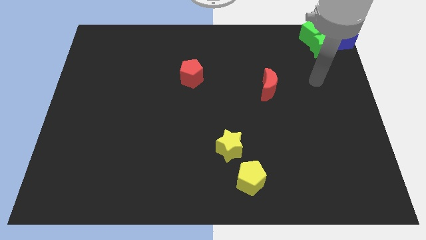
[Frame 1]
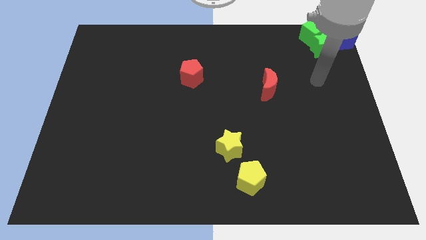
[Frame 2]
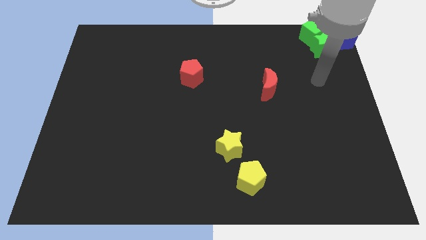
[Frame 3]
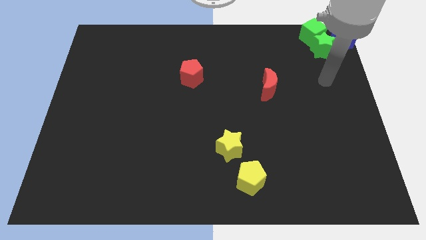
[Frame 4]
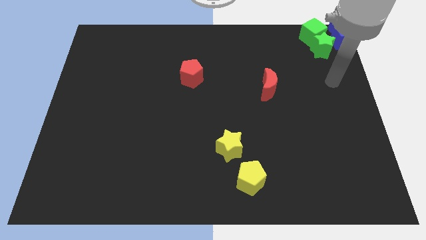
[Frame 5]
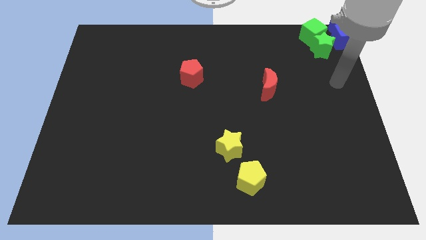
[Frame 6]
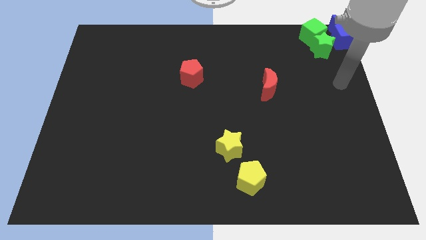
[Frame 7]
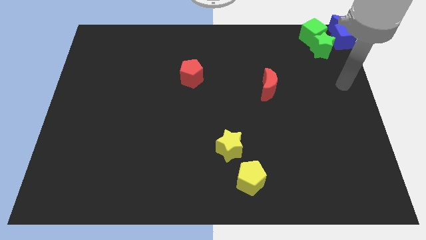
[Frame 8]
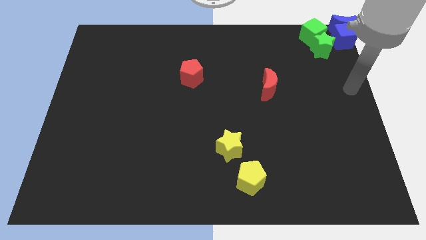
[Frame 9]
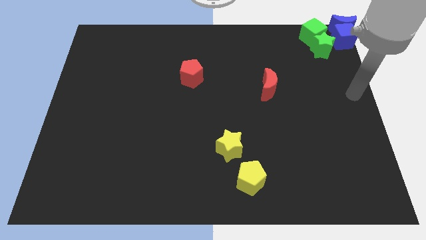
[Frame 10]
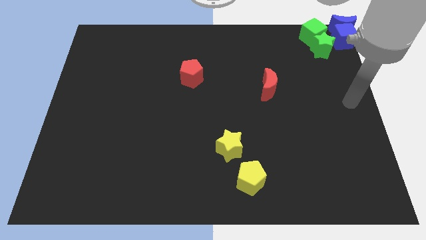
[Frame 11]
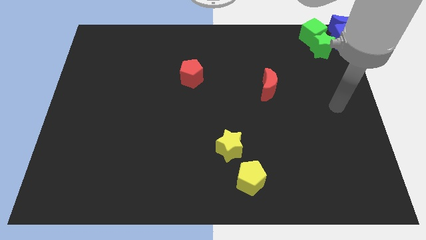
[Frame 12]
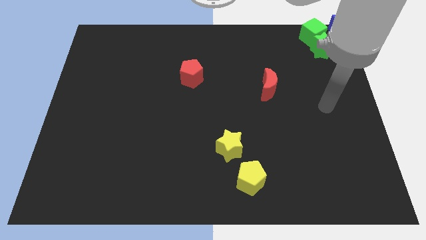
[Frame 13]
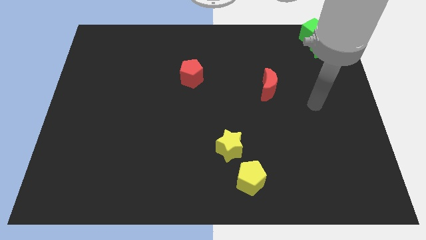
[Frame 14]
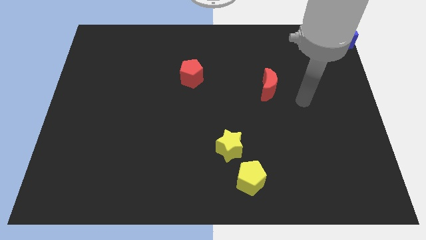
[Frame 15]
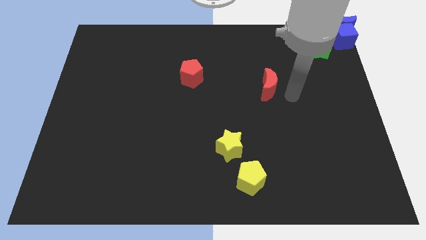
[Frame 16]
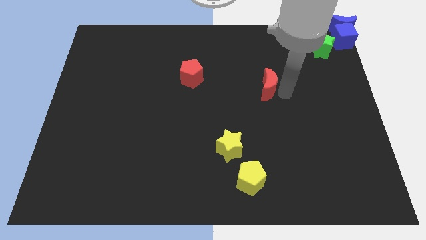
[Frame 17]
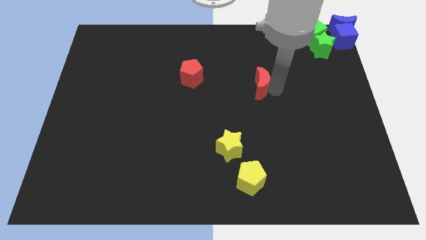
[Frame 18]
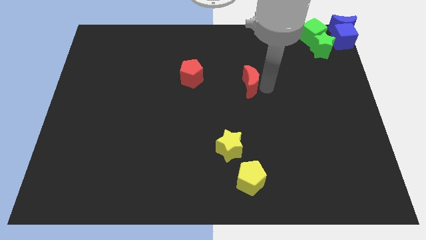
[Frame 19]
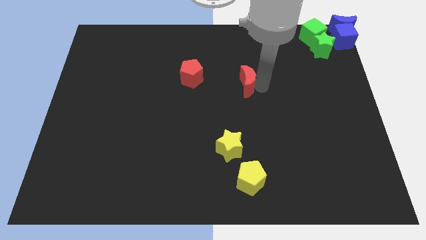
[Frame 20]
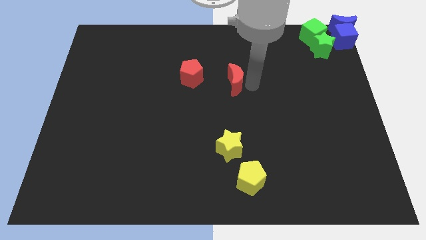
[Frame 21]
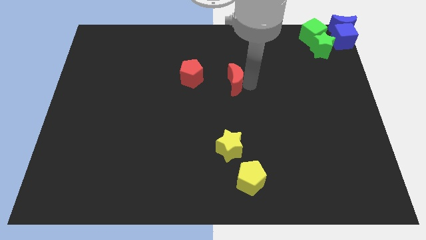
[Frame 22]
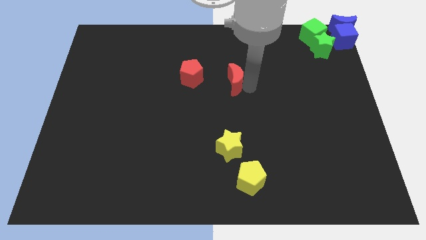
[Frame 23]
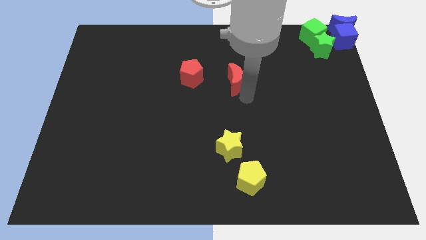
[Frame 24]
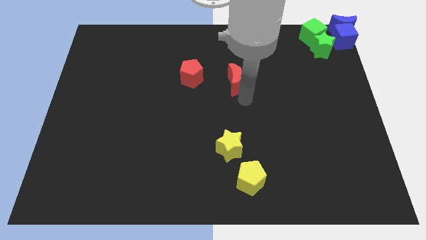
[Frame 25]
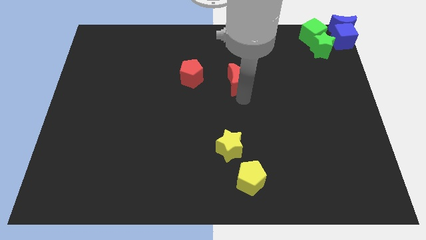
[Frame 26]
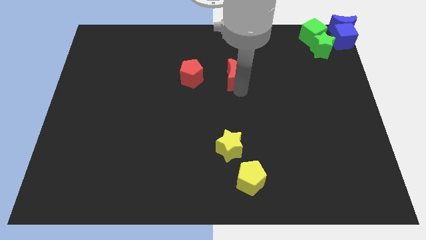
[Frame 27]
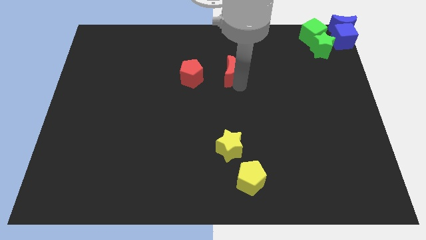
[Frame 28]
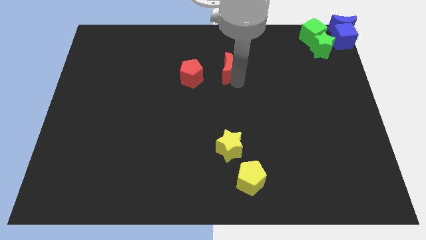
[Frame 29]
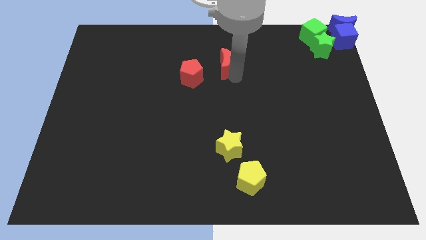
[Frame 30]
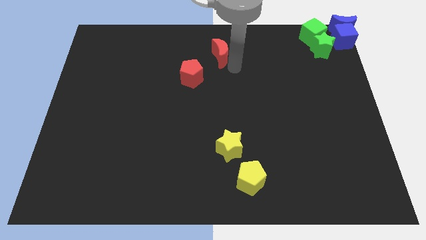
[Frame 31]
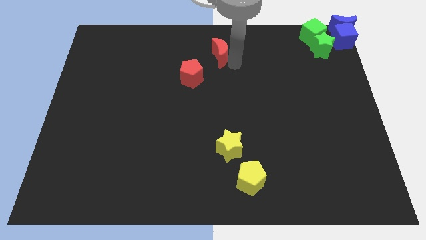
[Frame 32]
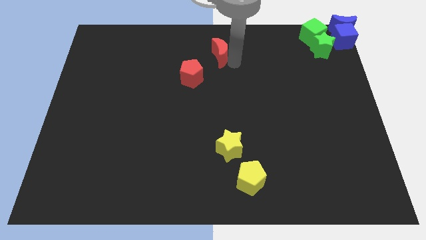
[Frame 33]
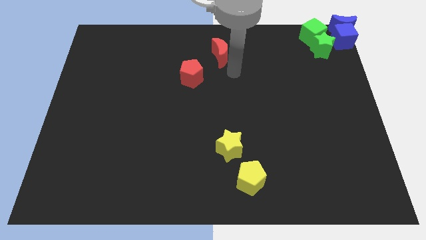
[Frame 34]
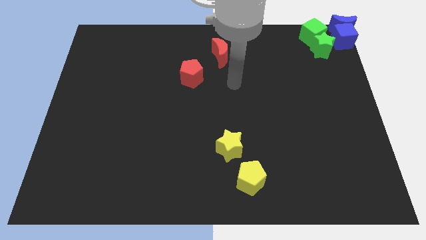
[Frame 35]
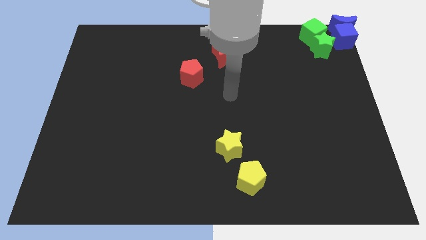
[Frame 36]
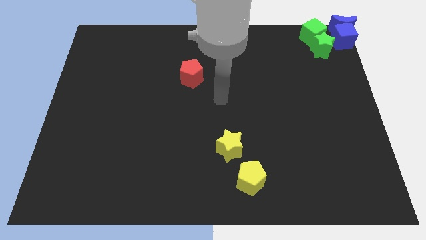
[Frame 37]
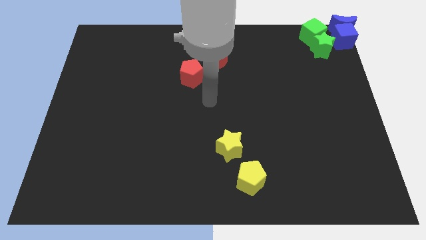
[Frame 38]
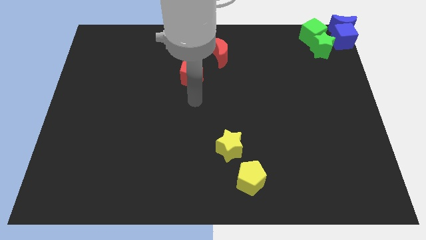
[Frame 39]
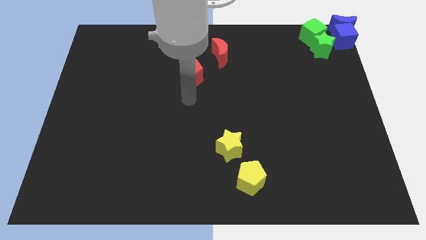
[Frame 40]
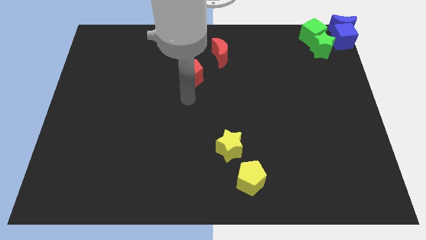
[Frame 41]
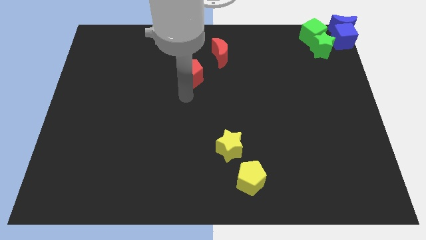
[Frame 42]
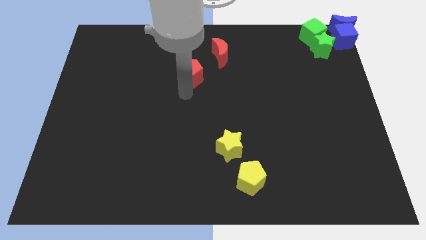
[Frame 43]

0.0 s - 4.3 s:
place the red crescent vertically above the yellow star

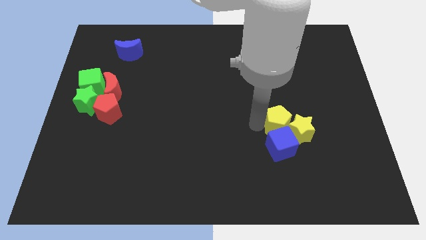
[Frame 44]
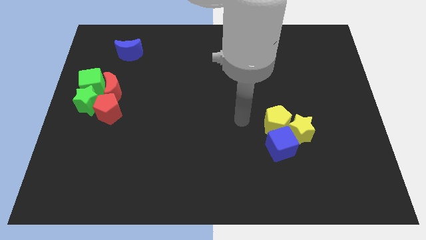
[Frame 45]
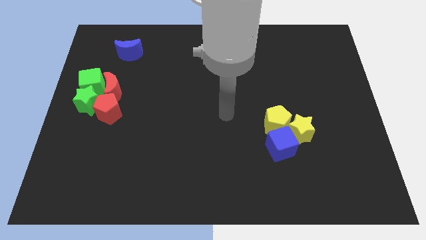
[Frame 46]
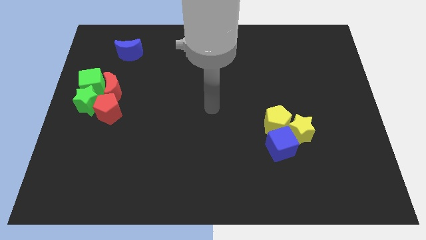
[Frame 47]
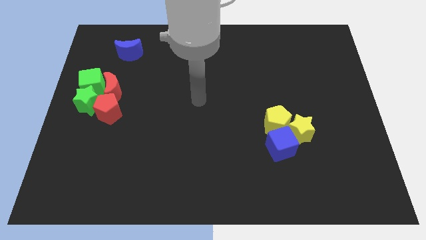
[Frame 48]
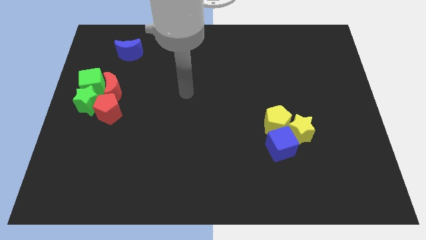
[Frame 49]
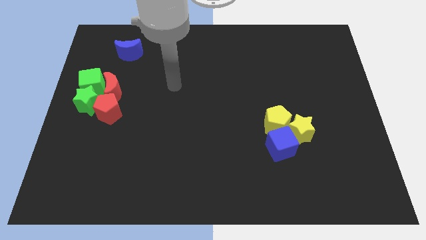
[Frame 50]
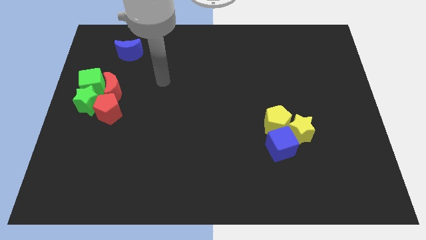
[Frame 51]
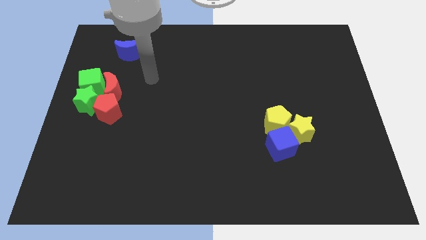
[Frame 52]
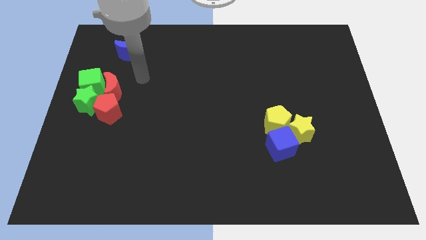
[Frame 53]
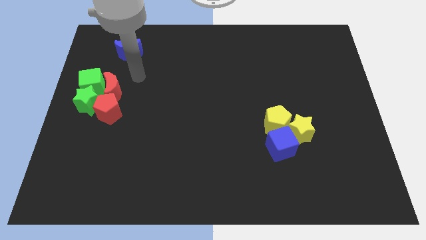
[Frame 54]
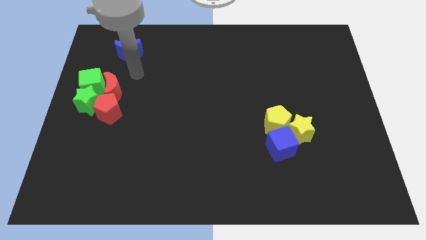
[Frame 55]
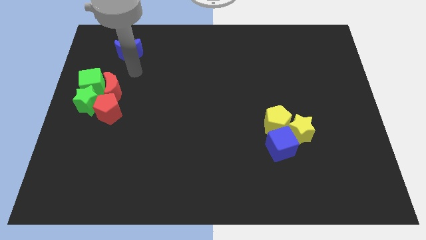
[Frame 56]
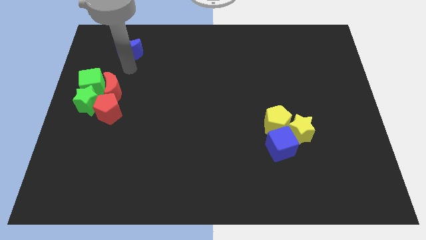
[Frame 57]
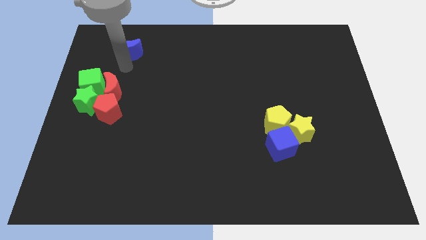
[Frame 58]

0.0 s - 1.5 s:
go and push your hand at the bottom of the blue moon

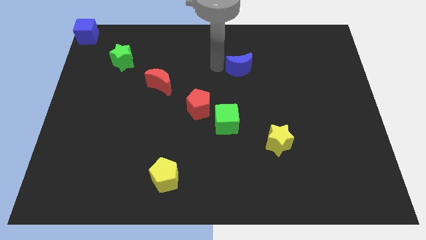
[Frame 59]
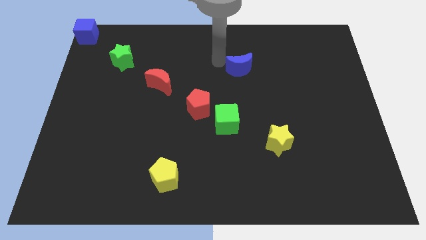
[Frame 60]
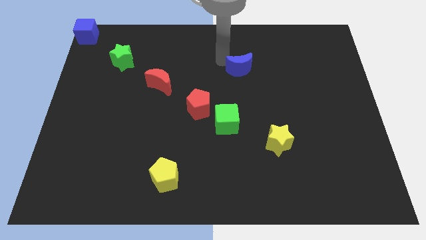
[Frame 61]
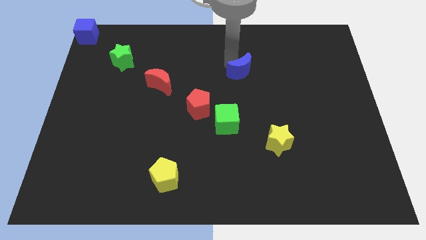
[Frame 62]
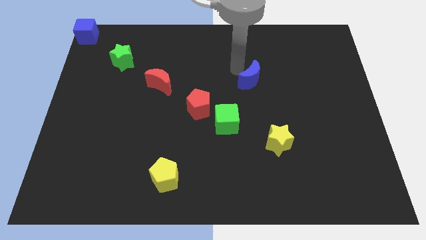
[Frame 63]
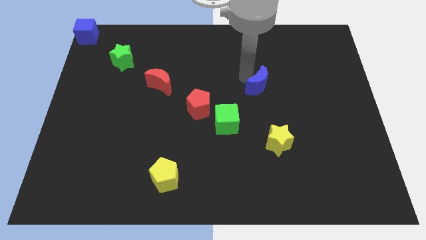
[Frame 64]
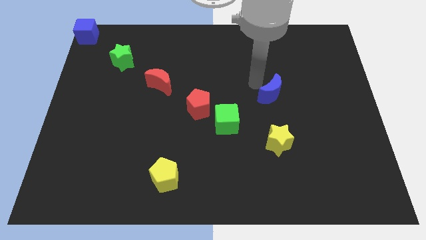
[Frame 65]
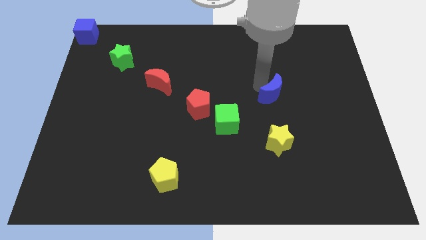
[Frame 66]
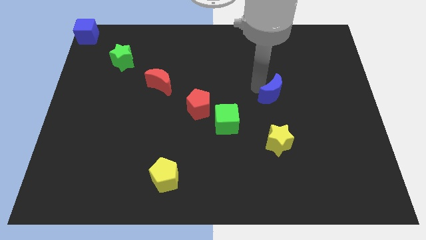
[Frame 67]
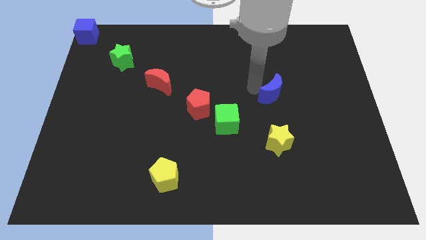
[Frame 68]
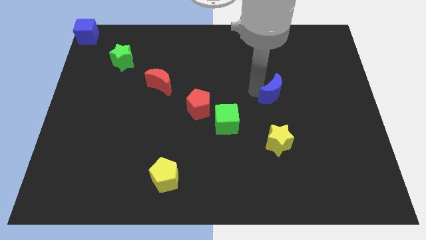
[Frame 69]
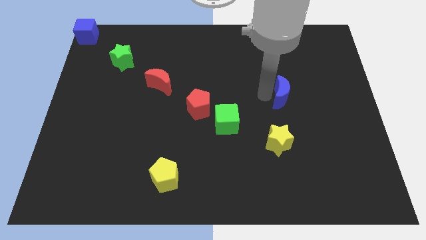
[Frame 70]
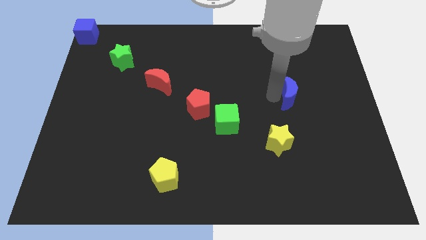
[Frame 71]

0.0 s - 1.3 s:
push the blue moon slightly to the bottom of the board

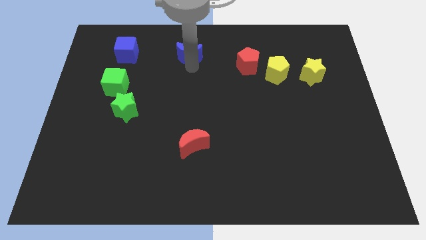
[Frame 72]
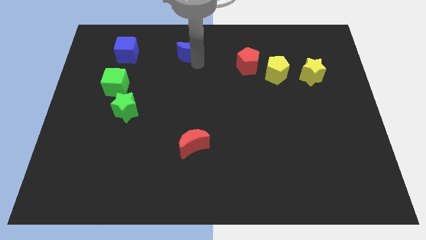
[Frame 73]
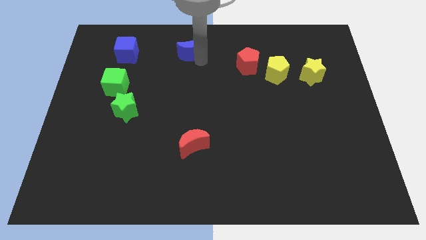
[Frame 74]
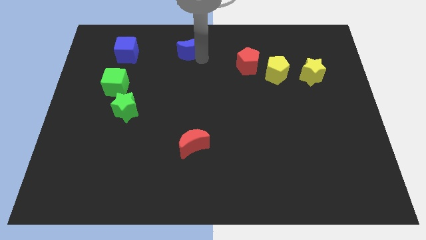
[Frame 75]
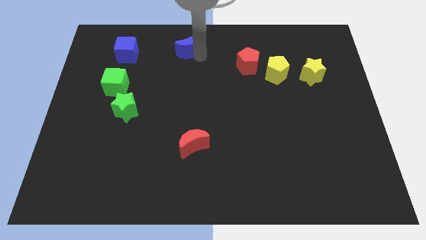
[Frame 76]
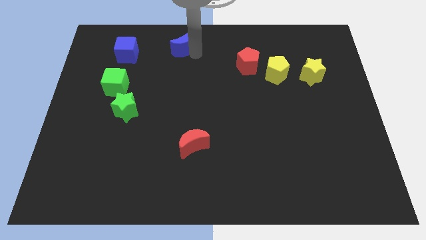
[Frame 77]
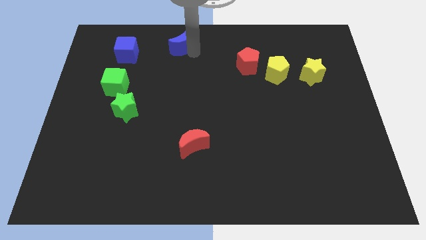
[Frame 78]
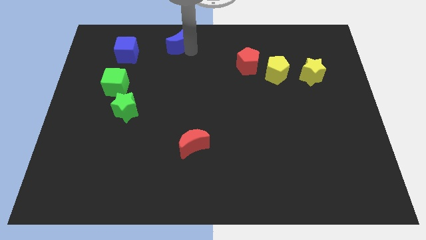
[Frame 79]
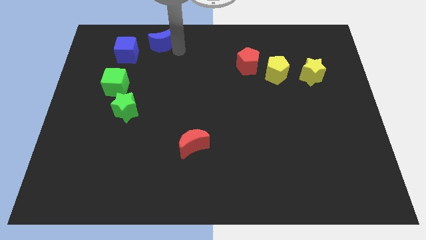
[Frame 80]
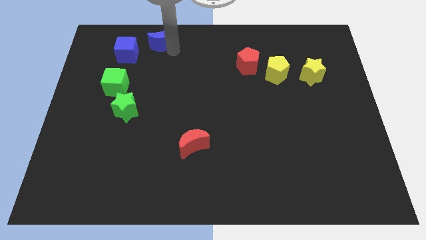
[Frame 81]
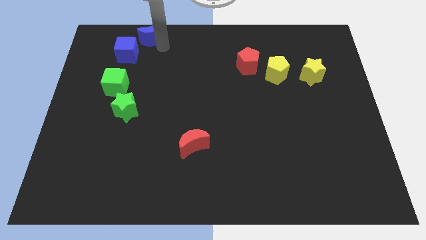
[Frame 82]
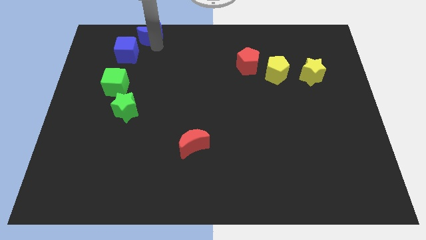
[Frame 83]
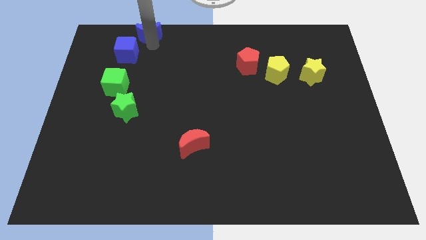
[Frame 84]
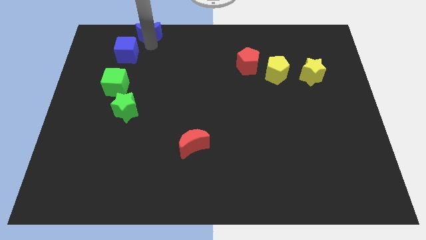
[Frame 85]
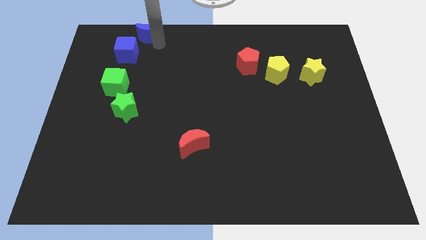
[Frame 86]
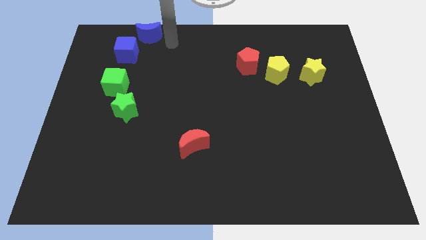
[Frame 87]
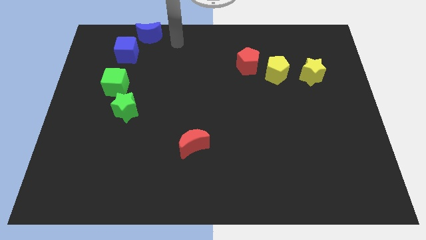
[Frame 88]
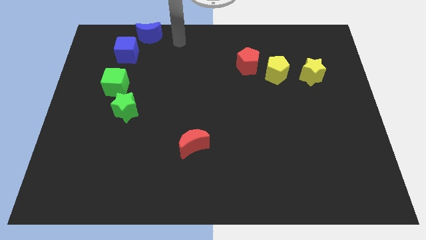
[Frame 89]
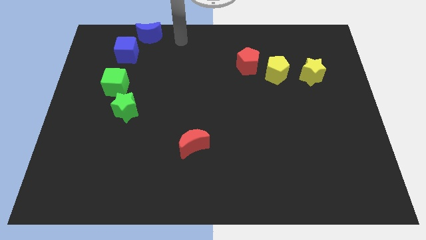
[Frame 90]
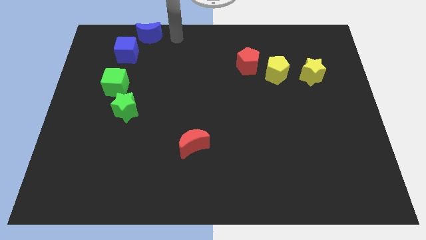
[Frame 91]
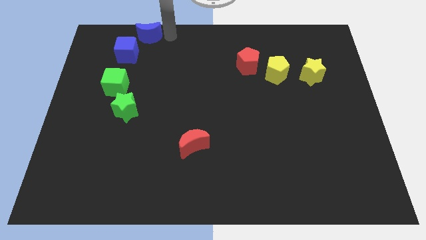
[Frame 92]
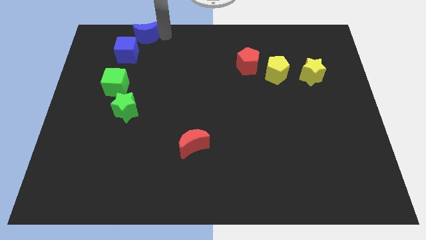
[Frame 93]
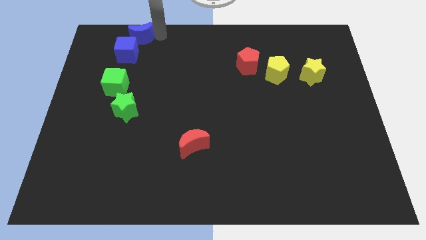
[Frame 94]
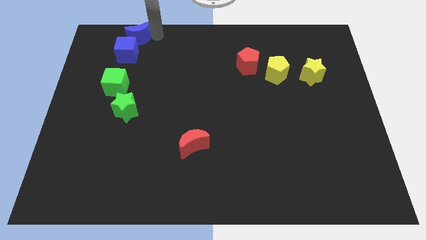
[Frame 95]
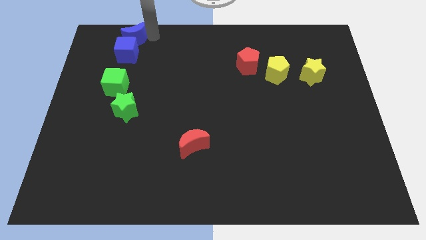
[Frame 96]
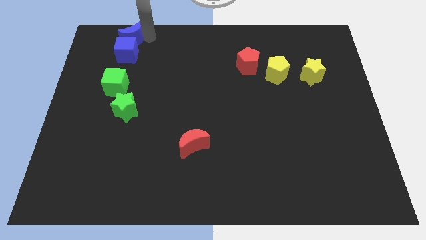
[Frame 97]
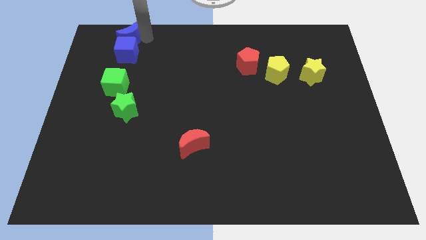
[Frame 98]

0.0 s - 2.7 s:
move the blue crescent slightly to the top left of the board
